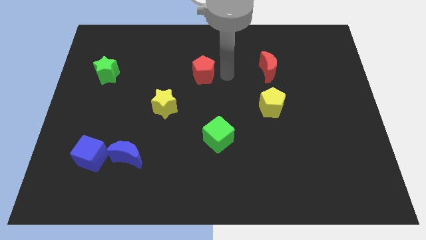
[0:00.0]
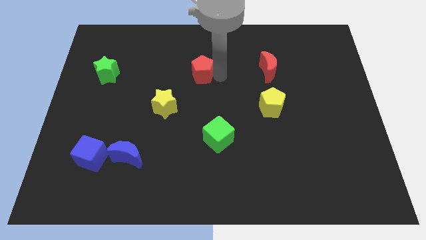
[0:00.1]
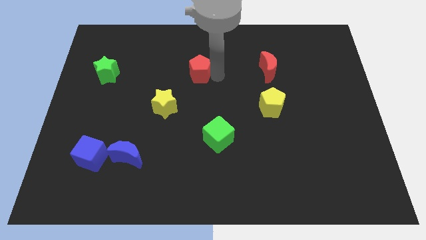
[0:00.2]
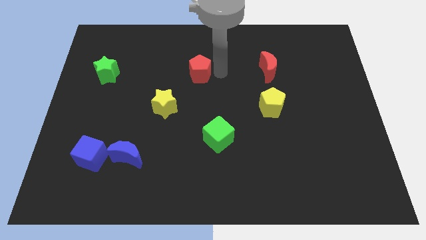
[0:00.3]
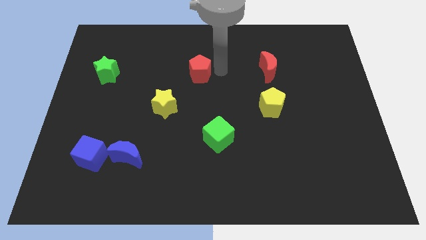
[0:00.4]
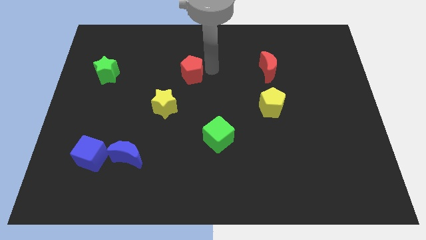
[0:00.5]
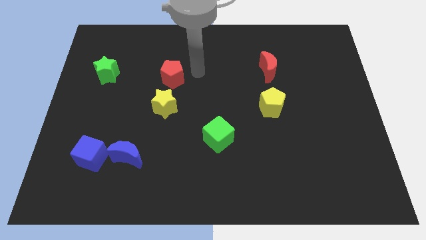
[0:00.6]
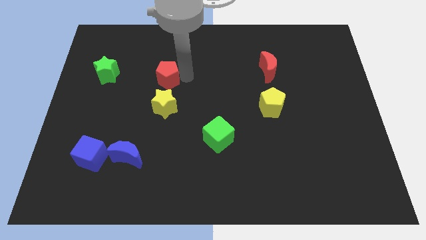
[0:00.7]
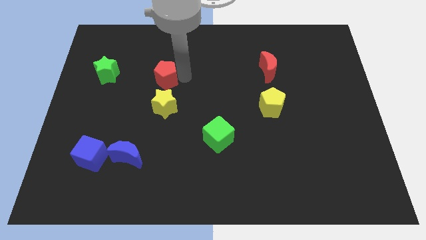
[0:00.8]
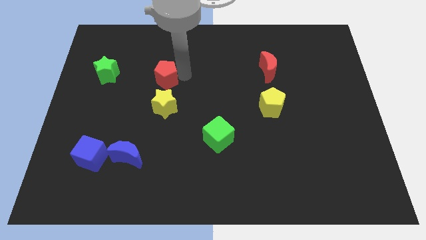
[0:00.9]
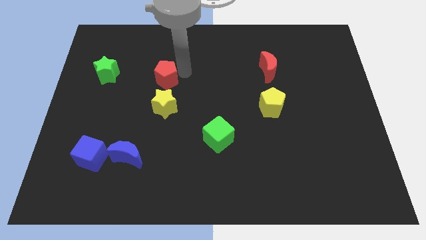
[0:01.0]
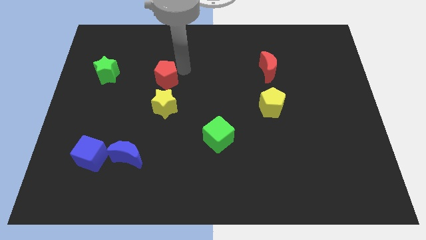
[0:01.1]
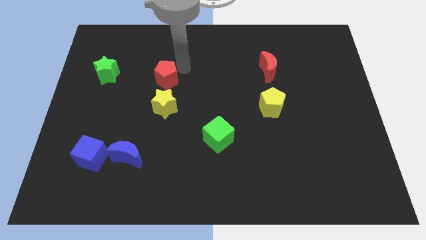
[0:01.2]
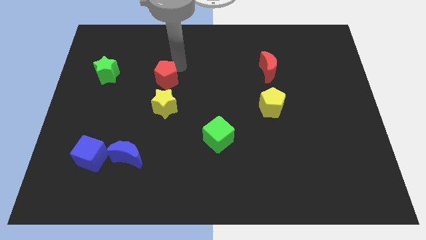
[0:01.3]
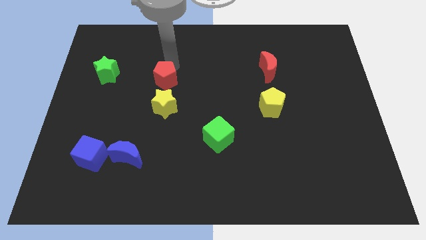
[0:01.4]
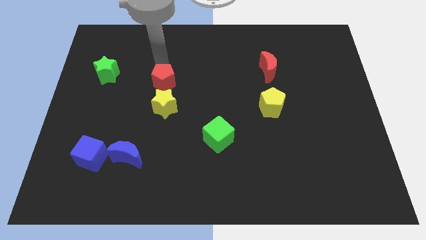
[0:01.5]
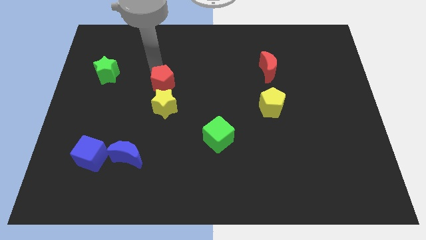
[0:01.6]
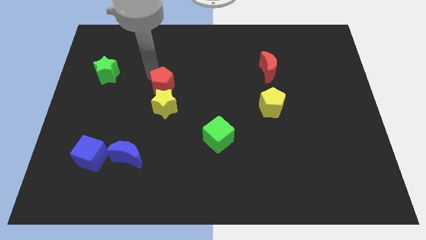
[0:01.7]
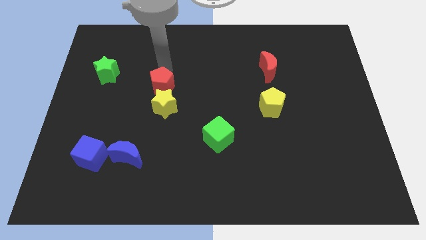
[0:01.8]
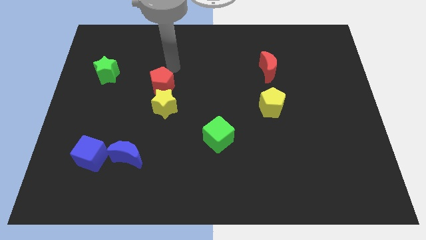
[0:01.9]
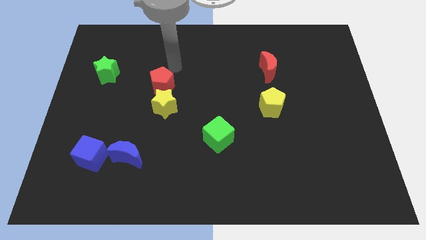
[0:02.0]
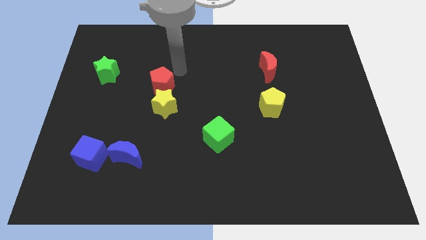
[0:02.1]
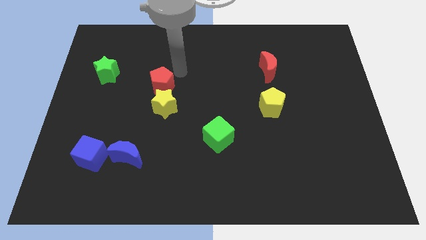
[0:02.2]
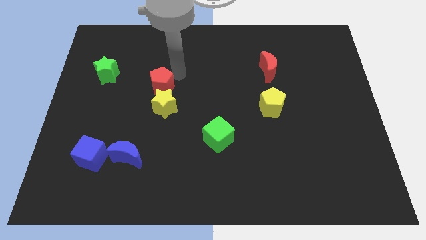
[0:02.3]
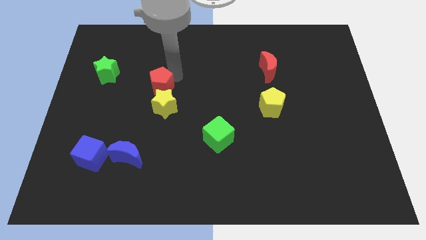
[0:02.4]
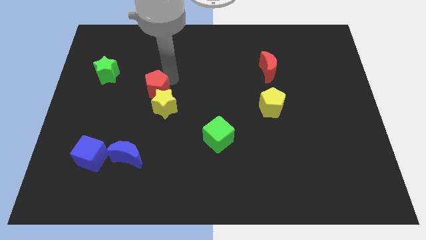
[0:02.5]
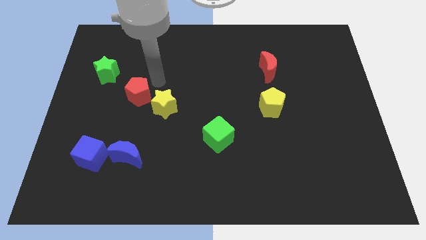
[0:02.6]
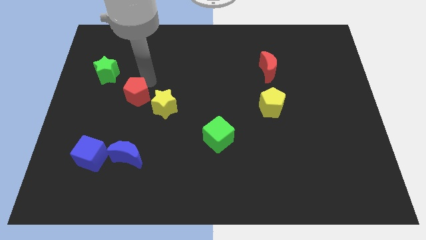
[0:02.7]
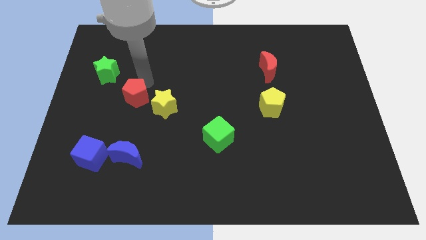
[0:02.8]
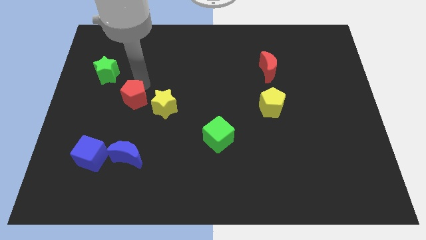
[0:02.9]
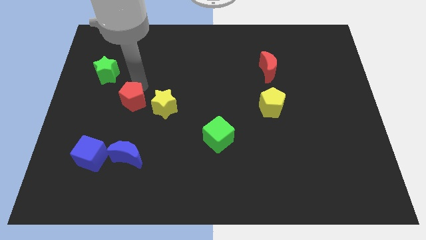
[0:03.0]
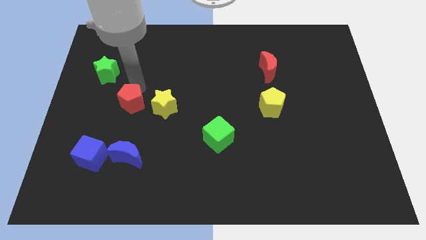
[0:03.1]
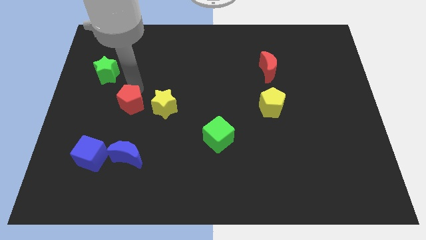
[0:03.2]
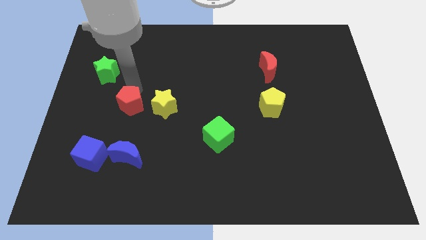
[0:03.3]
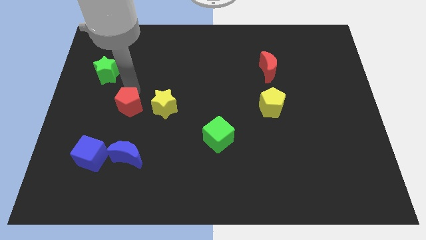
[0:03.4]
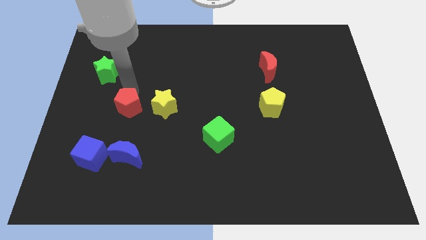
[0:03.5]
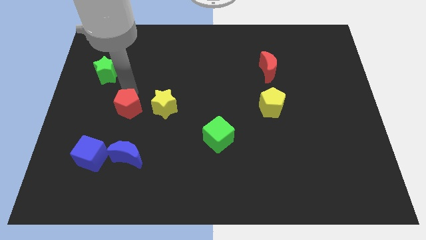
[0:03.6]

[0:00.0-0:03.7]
move the red pentagon to the right of the yellow star

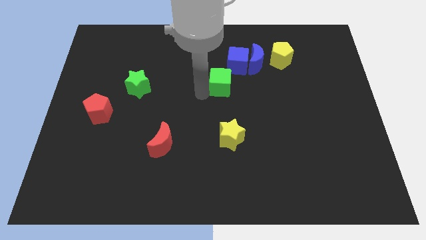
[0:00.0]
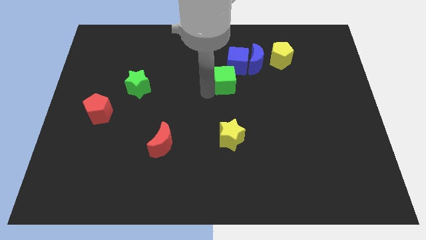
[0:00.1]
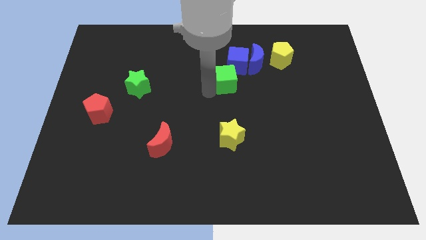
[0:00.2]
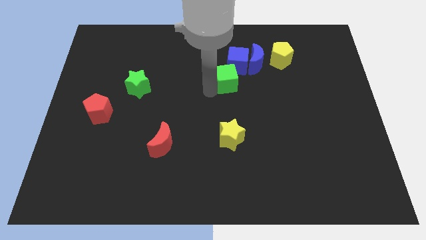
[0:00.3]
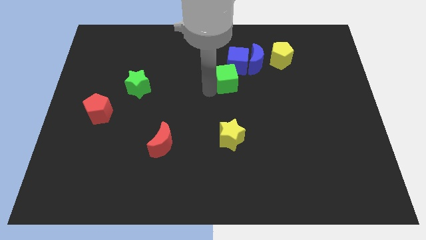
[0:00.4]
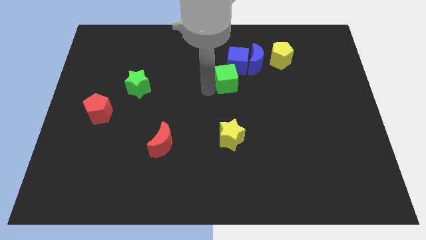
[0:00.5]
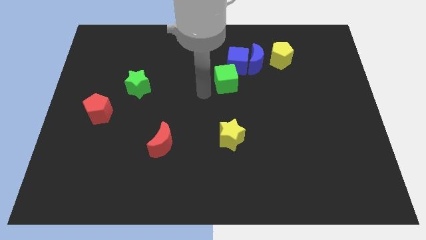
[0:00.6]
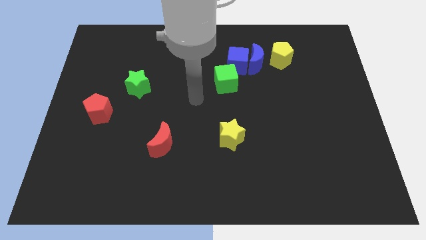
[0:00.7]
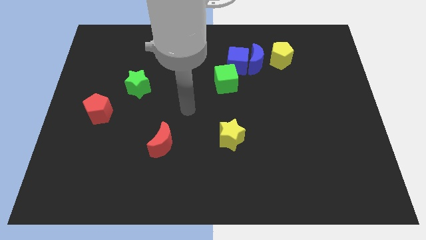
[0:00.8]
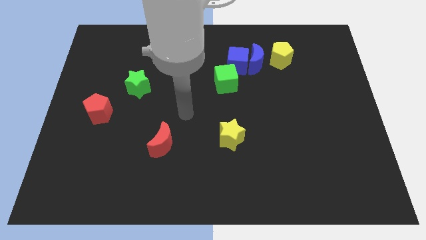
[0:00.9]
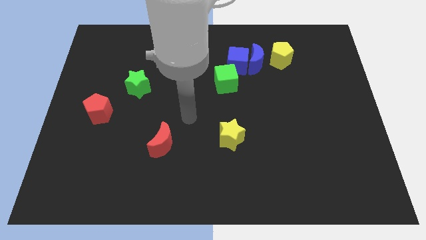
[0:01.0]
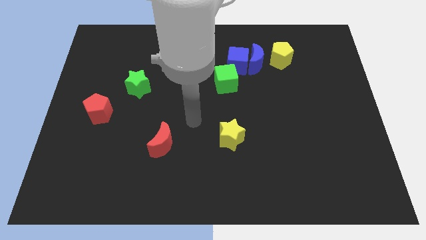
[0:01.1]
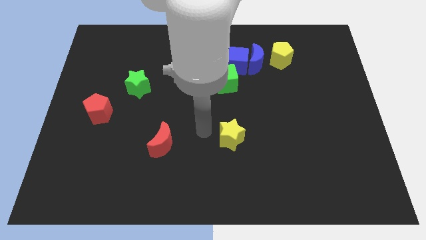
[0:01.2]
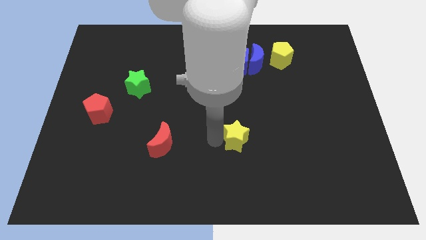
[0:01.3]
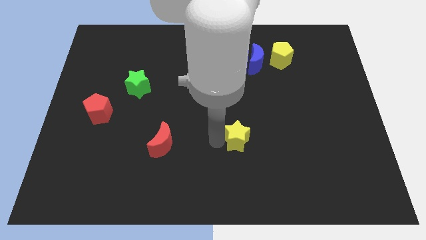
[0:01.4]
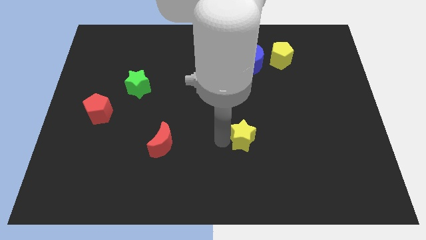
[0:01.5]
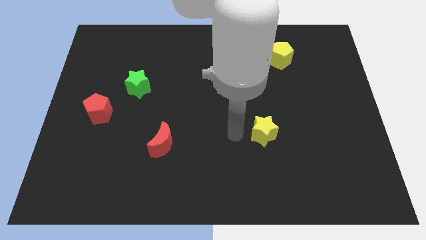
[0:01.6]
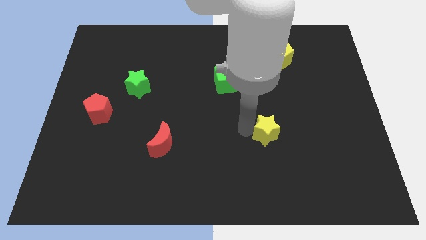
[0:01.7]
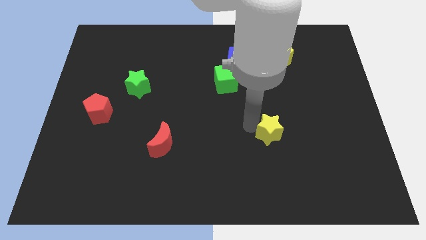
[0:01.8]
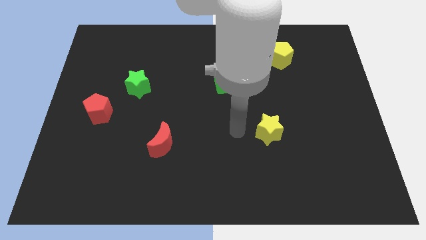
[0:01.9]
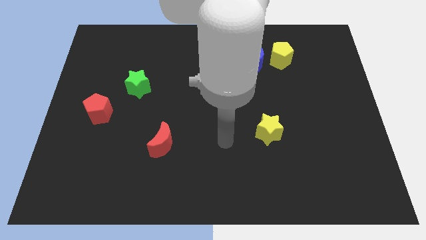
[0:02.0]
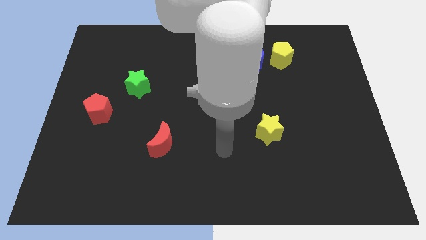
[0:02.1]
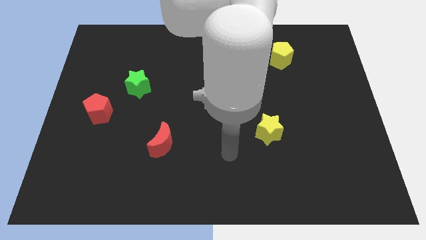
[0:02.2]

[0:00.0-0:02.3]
place the yellow star below the blue moon

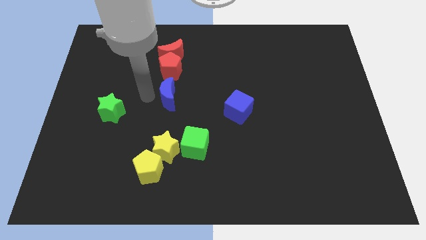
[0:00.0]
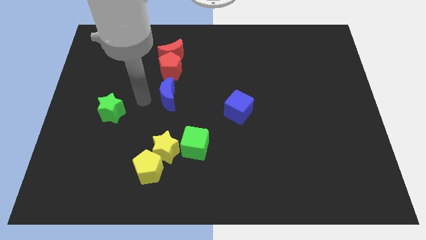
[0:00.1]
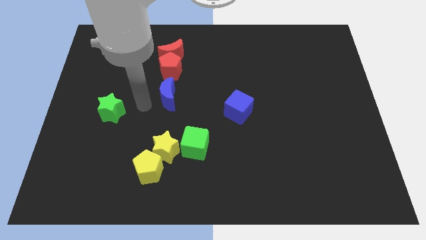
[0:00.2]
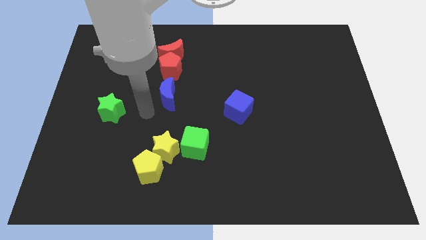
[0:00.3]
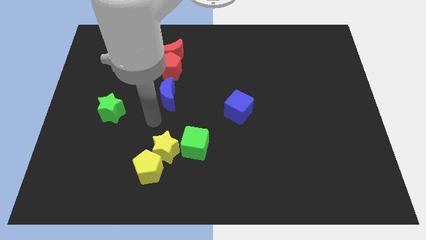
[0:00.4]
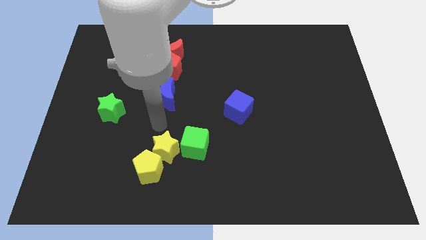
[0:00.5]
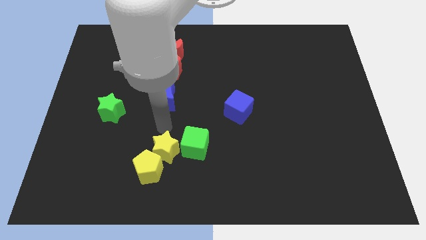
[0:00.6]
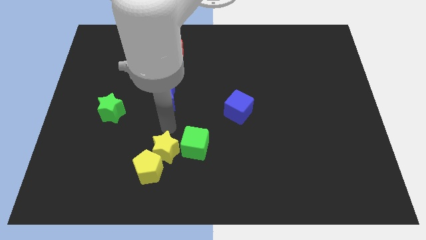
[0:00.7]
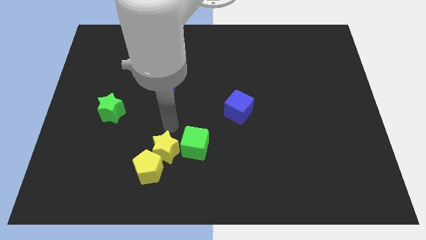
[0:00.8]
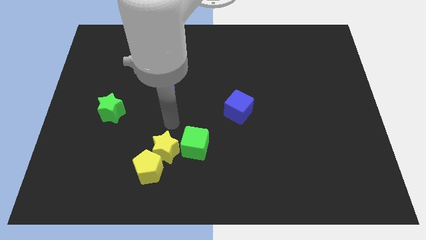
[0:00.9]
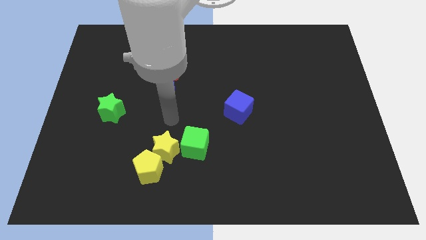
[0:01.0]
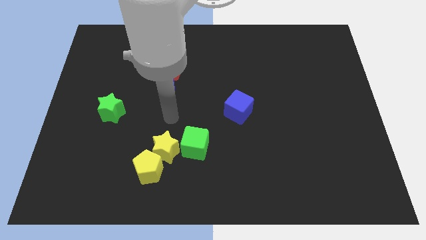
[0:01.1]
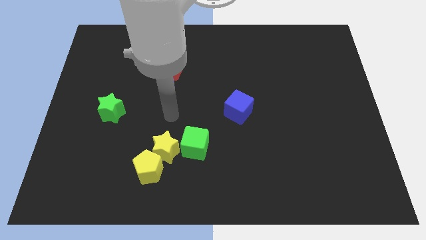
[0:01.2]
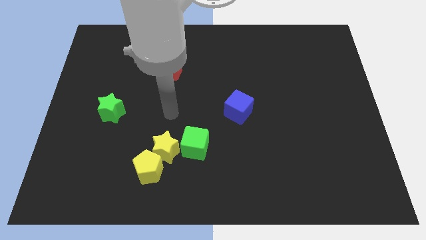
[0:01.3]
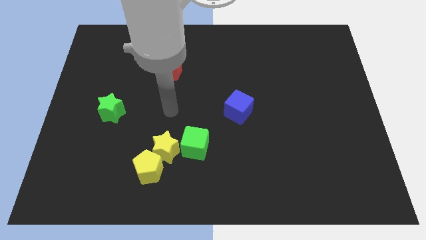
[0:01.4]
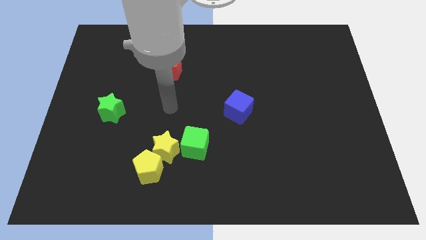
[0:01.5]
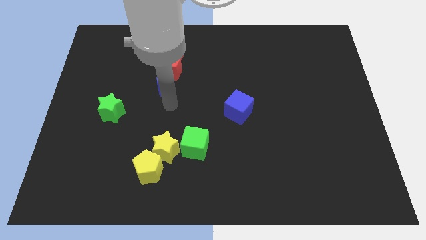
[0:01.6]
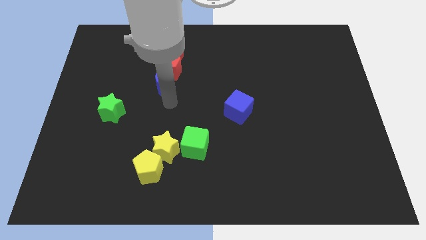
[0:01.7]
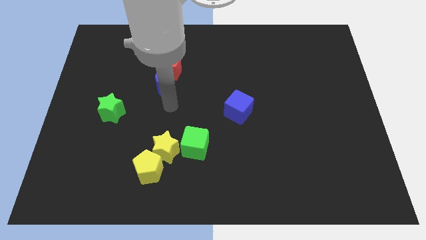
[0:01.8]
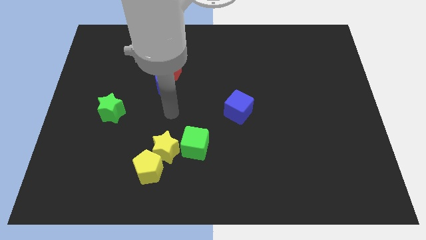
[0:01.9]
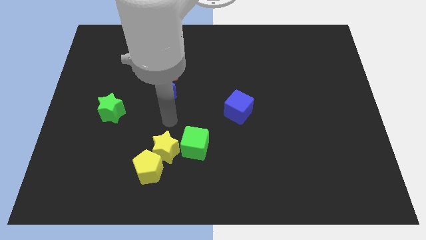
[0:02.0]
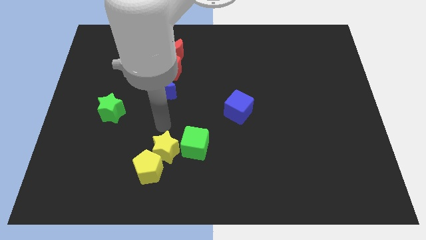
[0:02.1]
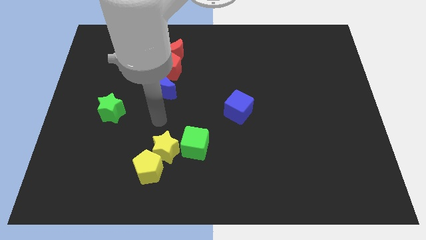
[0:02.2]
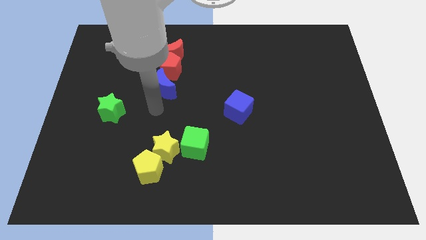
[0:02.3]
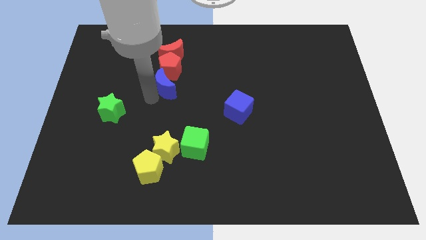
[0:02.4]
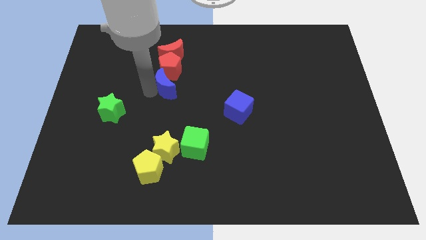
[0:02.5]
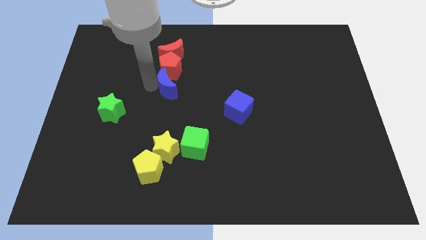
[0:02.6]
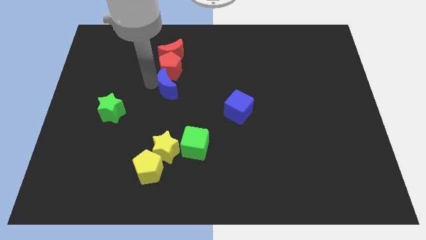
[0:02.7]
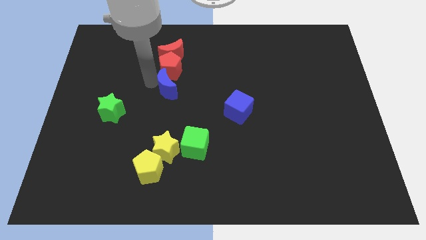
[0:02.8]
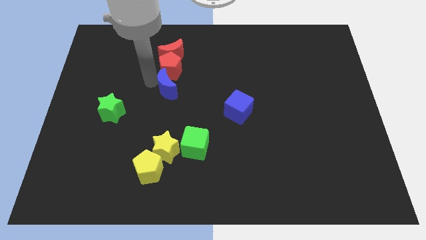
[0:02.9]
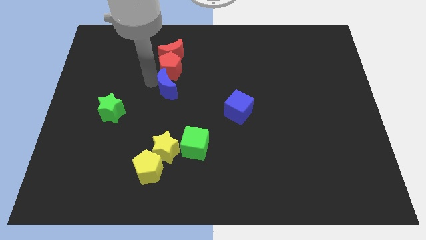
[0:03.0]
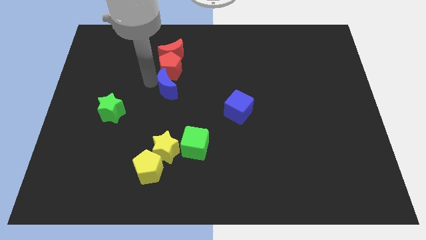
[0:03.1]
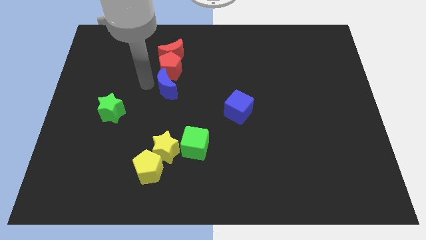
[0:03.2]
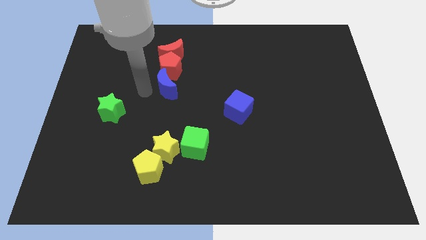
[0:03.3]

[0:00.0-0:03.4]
slide the blue moon into the red pentagon
